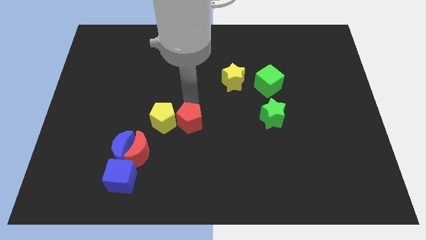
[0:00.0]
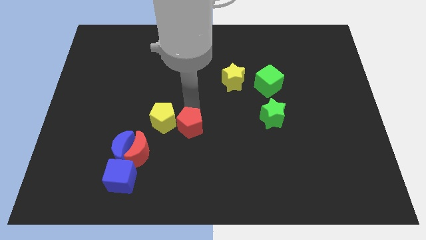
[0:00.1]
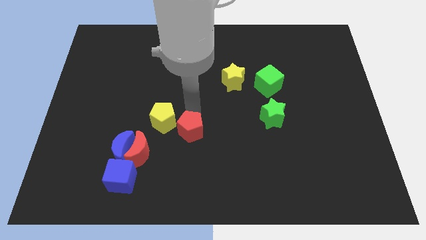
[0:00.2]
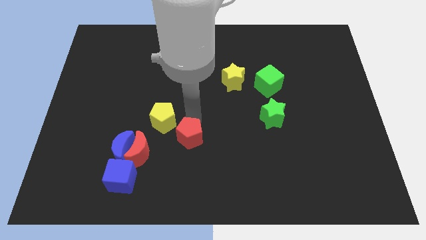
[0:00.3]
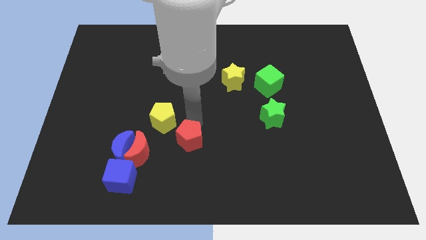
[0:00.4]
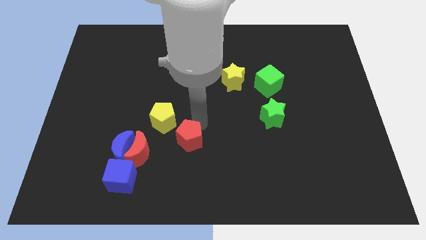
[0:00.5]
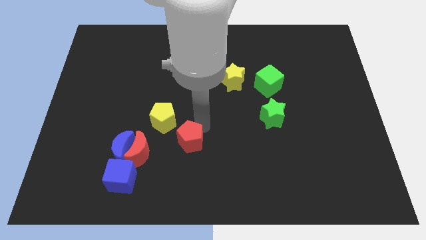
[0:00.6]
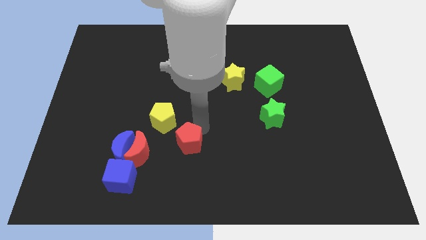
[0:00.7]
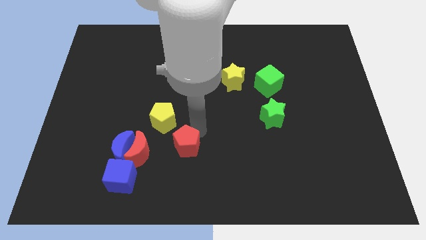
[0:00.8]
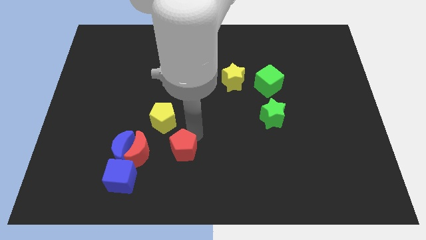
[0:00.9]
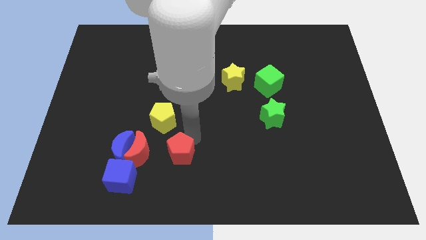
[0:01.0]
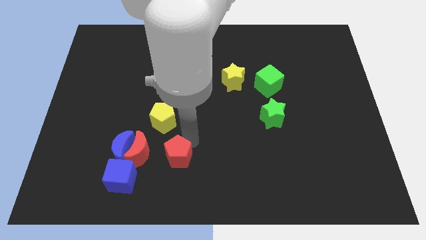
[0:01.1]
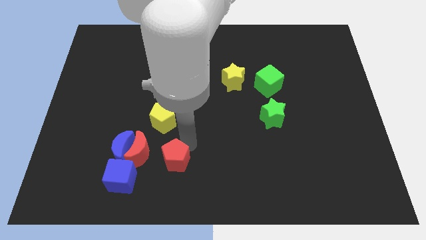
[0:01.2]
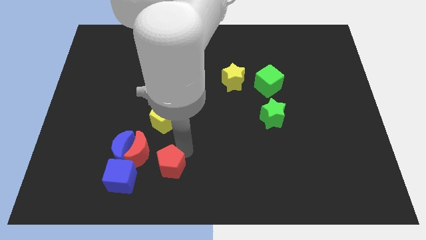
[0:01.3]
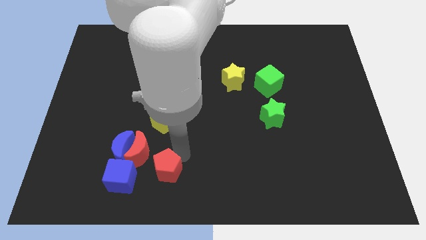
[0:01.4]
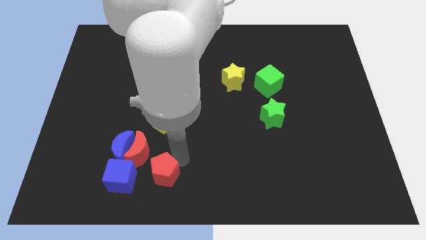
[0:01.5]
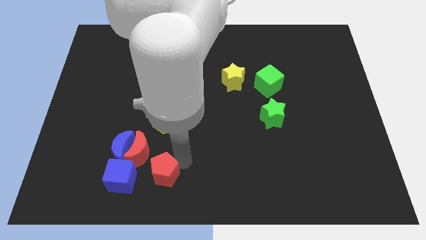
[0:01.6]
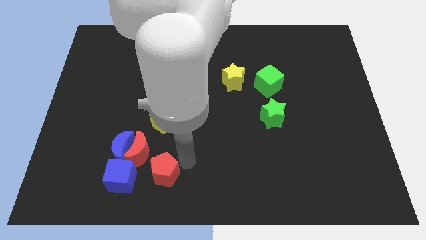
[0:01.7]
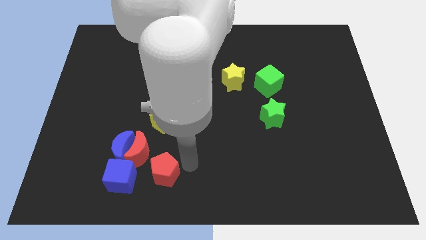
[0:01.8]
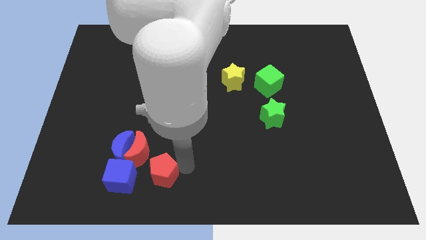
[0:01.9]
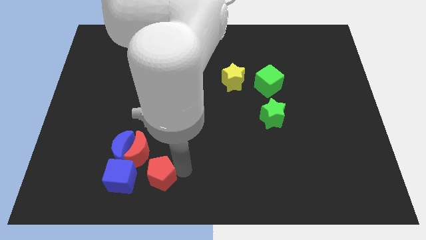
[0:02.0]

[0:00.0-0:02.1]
move the red pentagon diagonally bottom right to the red moon

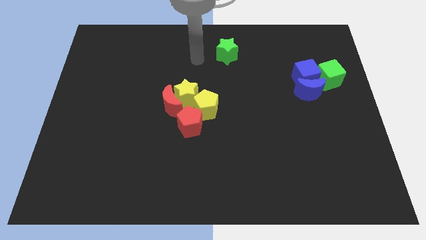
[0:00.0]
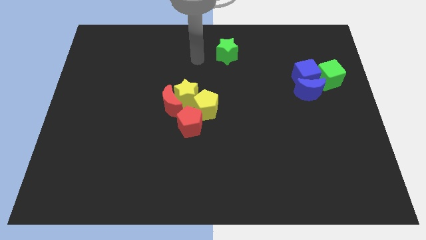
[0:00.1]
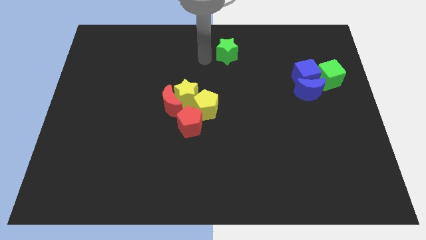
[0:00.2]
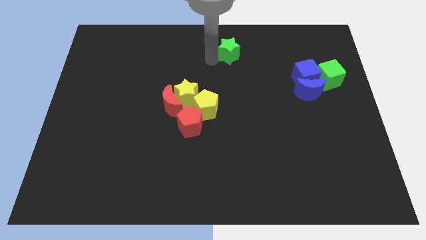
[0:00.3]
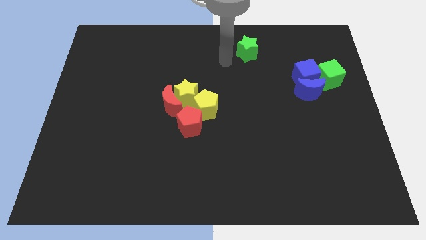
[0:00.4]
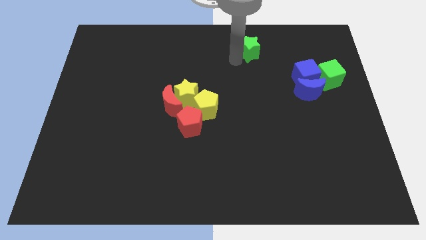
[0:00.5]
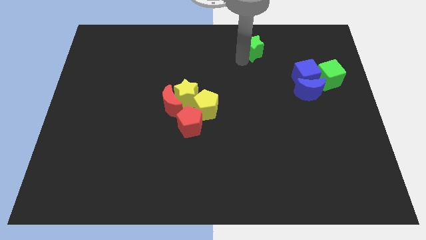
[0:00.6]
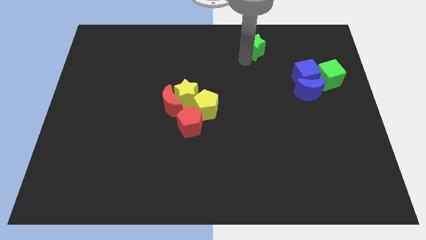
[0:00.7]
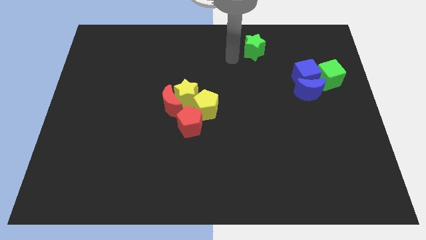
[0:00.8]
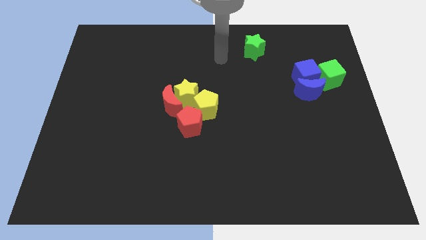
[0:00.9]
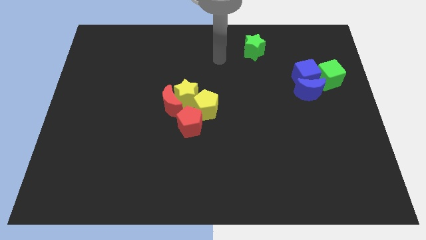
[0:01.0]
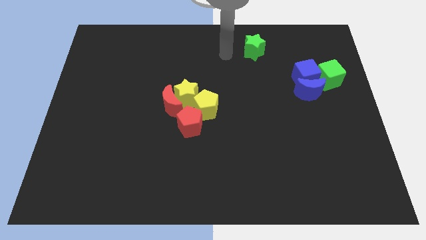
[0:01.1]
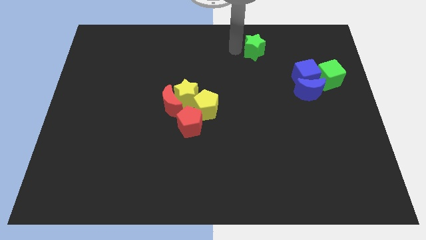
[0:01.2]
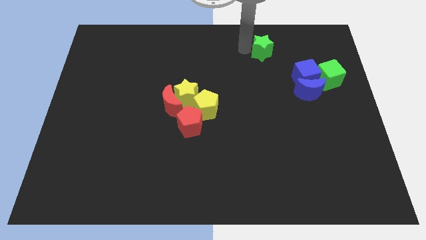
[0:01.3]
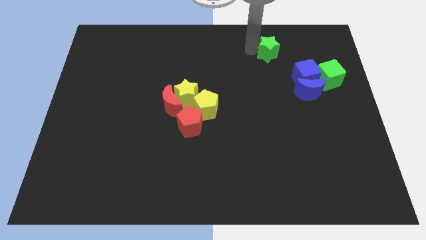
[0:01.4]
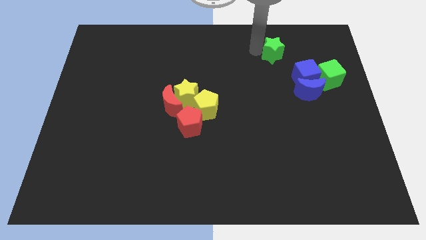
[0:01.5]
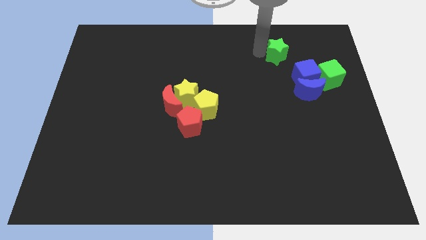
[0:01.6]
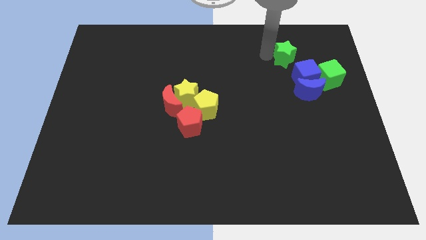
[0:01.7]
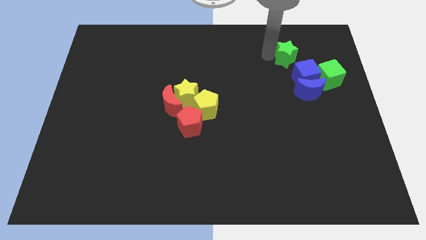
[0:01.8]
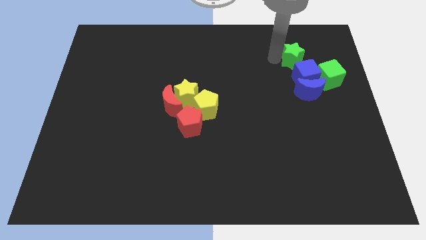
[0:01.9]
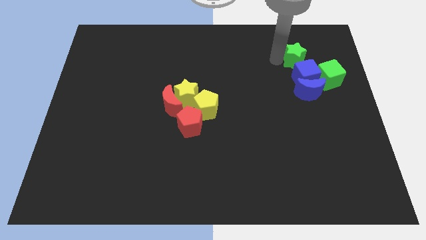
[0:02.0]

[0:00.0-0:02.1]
place the green star above the blue cube

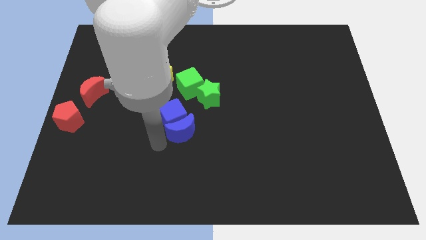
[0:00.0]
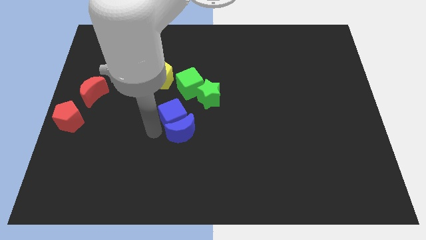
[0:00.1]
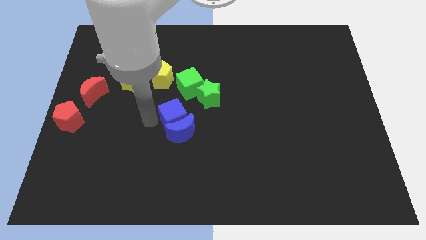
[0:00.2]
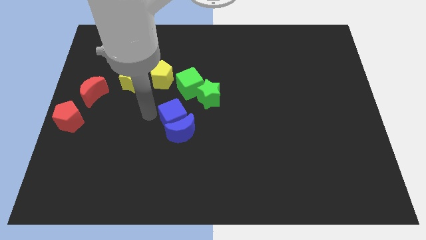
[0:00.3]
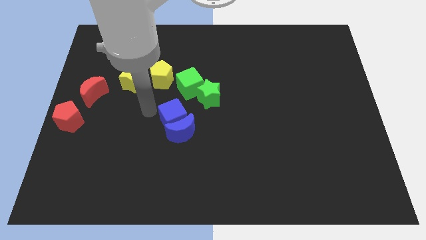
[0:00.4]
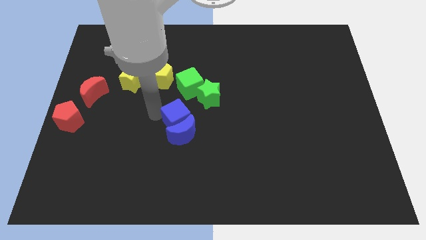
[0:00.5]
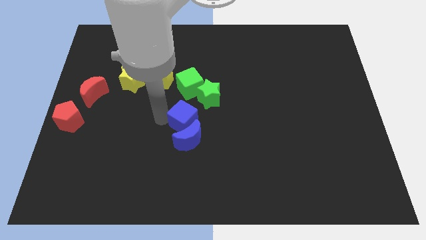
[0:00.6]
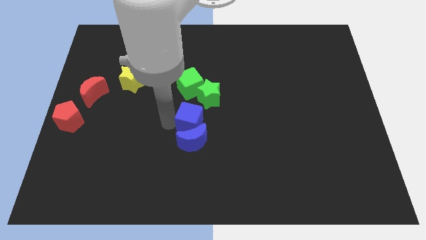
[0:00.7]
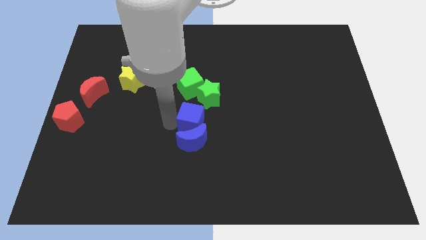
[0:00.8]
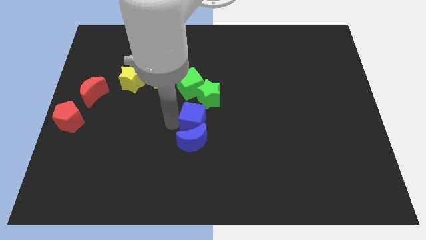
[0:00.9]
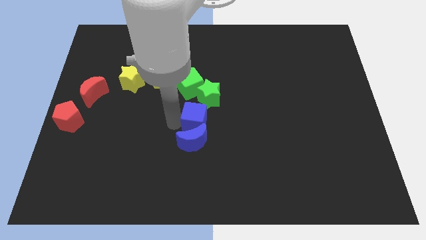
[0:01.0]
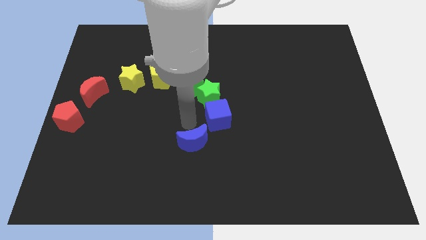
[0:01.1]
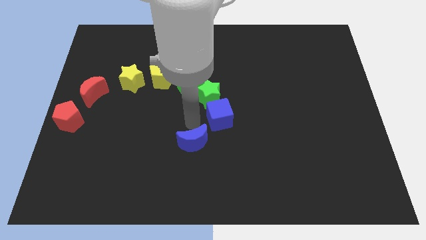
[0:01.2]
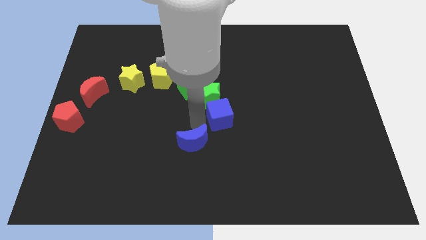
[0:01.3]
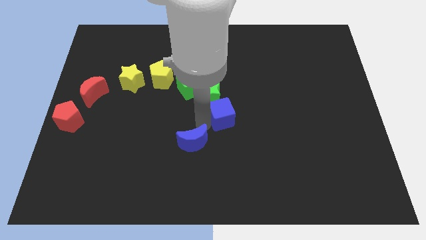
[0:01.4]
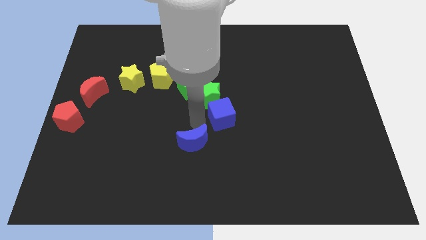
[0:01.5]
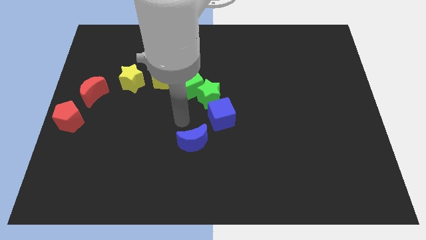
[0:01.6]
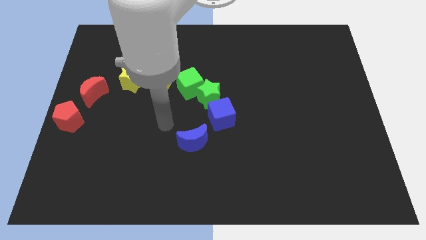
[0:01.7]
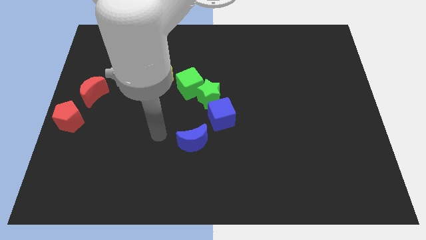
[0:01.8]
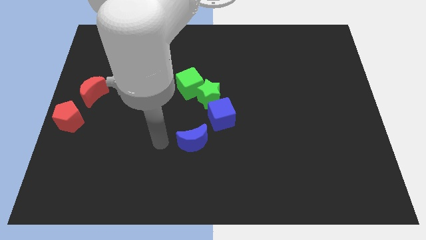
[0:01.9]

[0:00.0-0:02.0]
push blue cube below green star

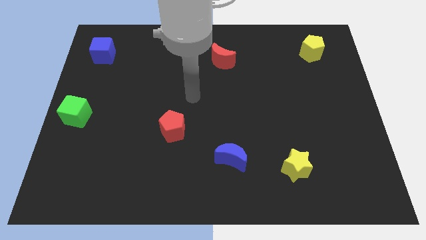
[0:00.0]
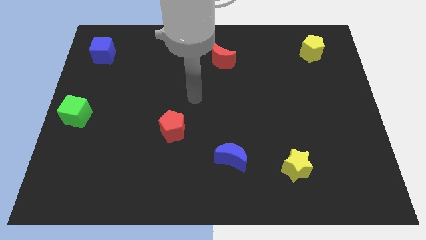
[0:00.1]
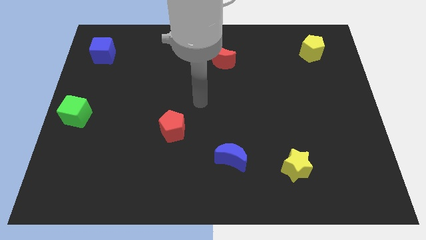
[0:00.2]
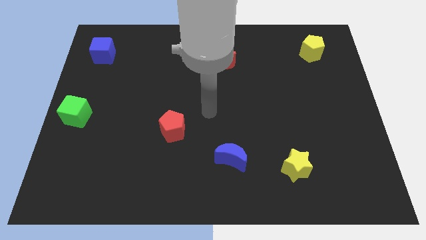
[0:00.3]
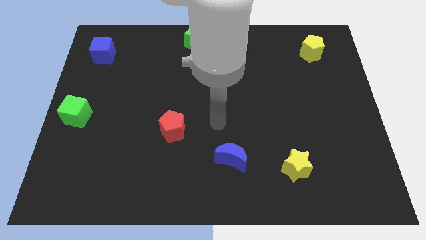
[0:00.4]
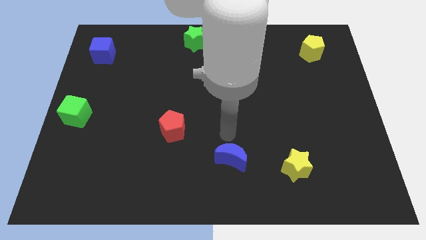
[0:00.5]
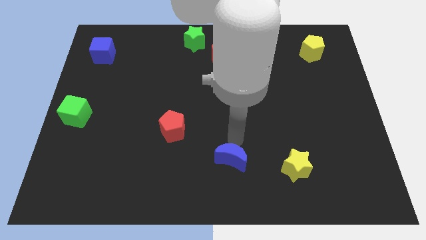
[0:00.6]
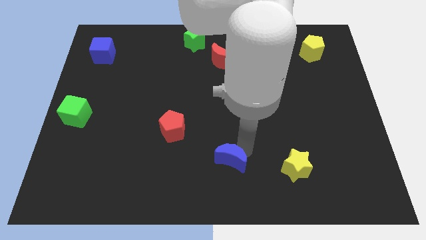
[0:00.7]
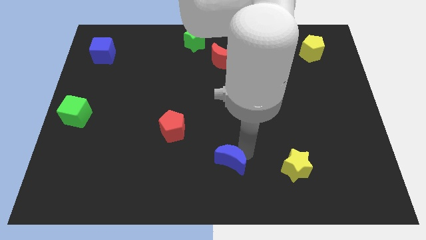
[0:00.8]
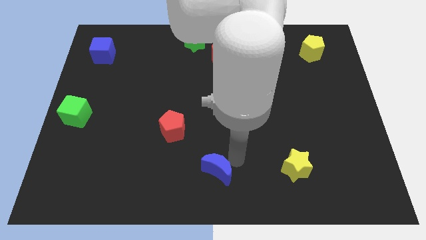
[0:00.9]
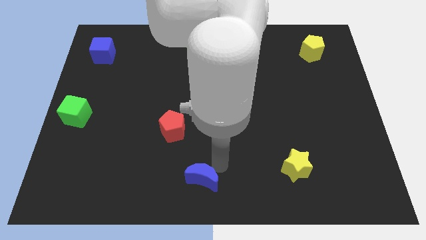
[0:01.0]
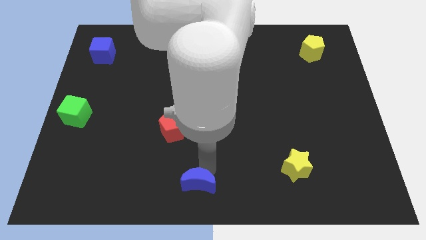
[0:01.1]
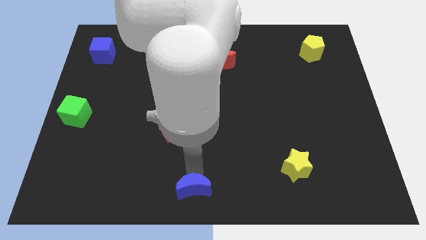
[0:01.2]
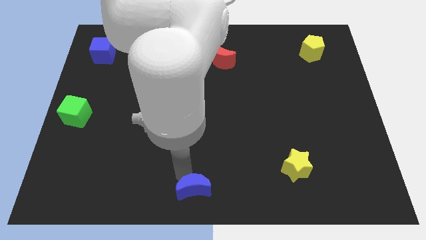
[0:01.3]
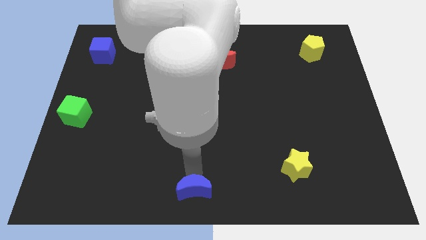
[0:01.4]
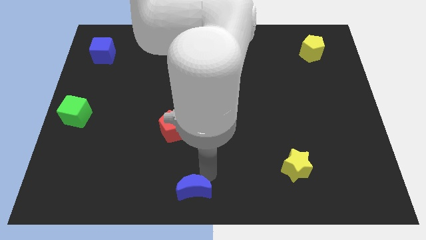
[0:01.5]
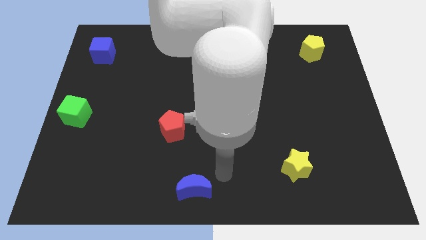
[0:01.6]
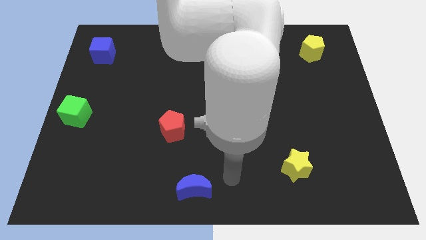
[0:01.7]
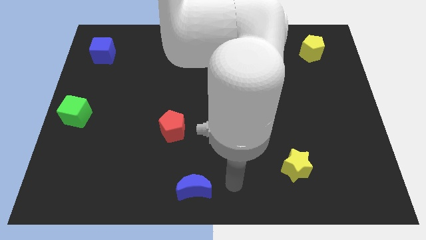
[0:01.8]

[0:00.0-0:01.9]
push the blue moon to the bottom center of the board

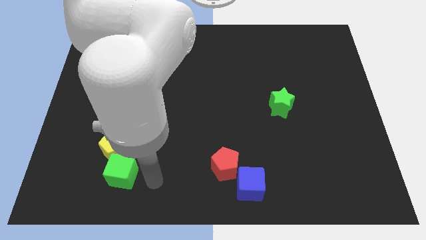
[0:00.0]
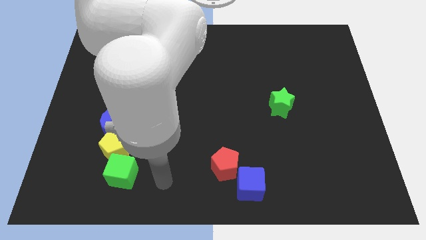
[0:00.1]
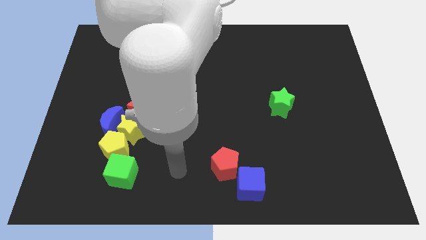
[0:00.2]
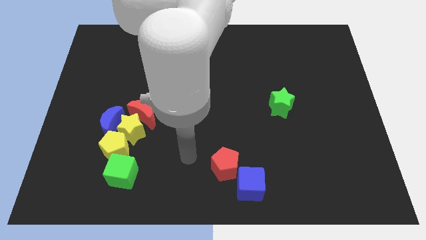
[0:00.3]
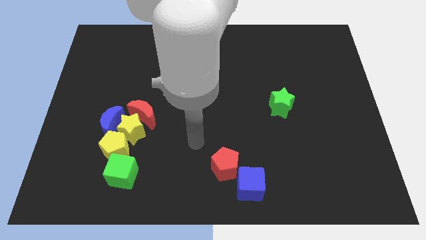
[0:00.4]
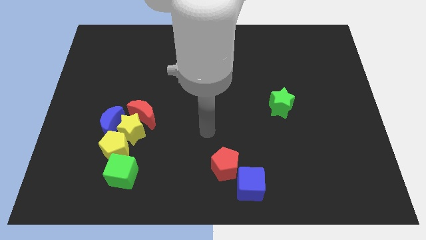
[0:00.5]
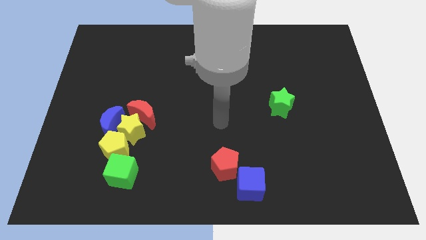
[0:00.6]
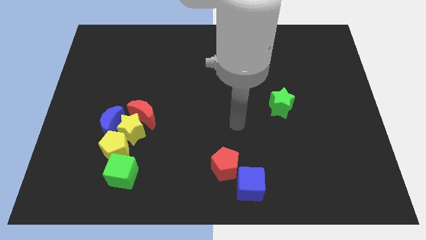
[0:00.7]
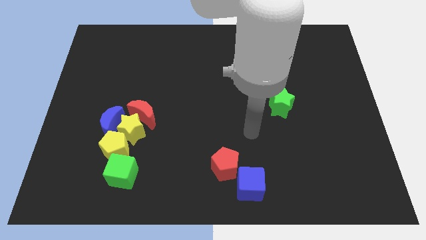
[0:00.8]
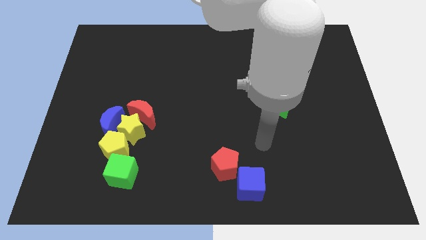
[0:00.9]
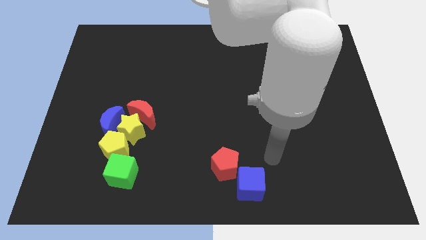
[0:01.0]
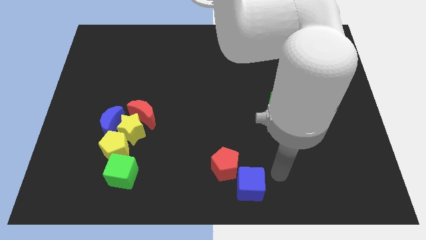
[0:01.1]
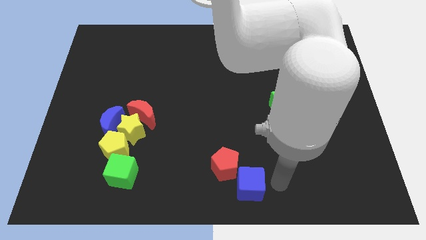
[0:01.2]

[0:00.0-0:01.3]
move your arm to the right of the blue cube
